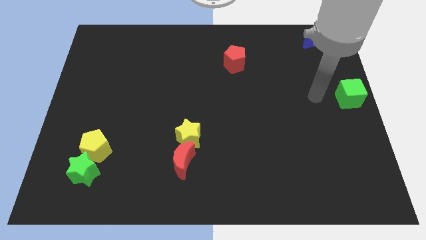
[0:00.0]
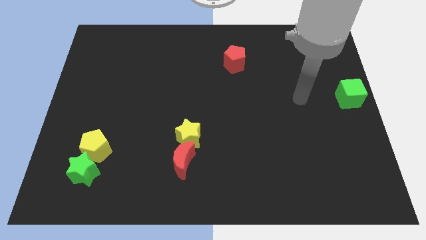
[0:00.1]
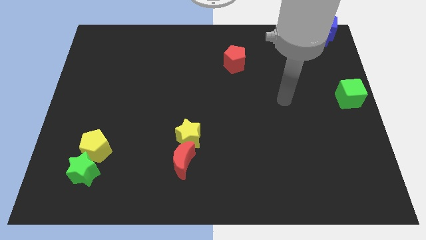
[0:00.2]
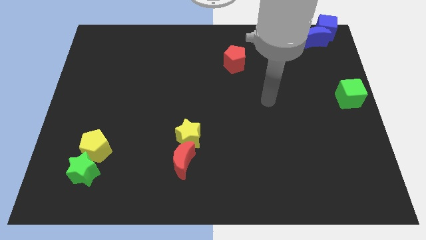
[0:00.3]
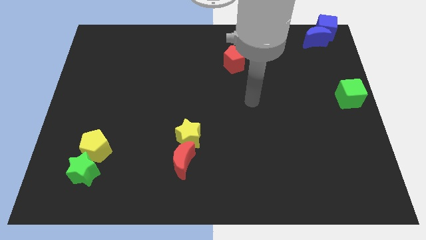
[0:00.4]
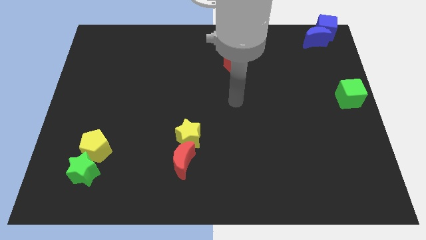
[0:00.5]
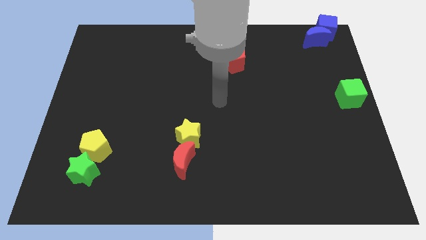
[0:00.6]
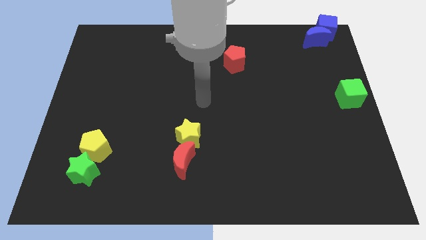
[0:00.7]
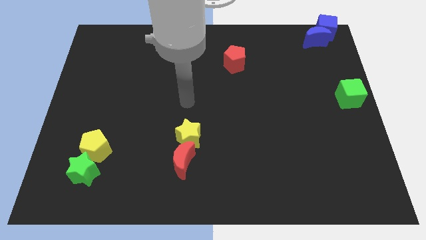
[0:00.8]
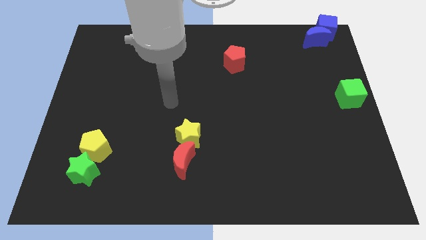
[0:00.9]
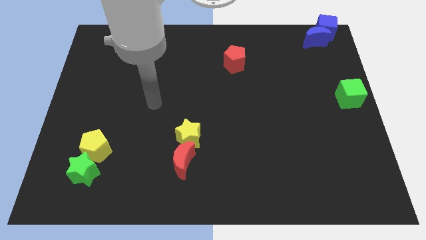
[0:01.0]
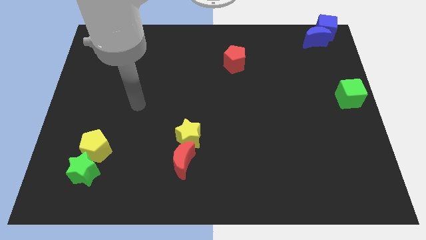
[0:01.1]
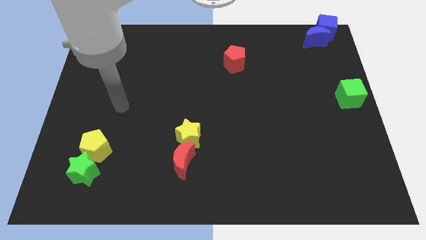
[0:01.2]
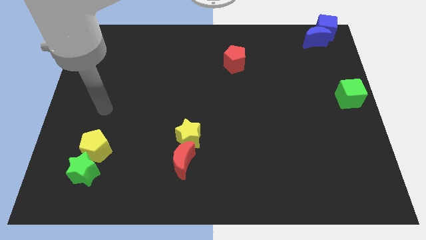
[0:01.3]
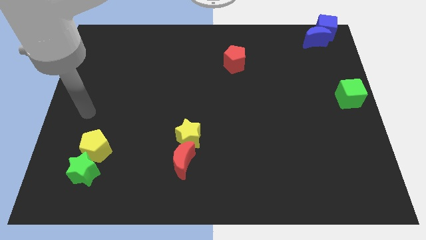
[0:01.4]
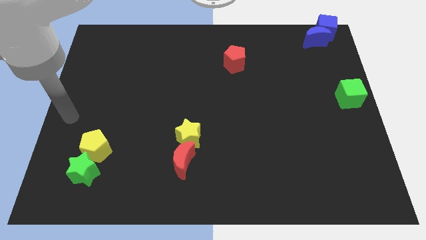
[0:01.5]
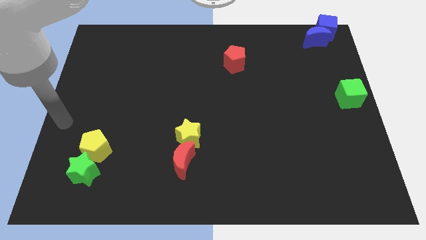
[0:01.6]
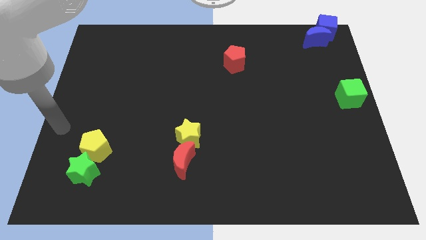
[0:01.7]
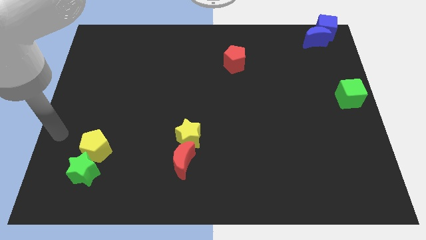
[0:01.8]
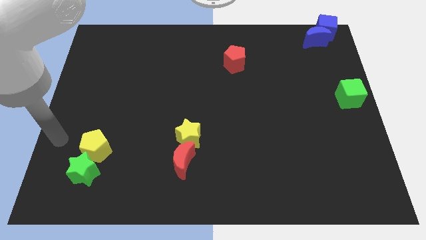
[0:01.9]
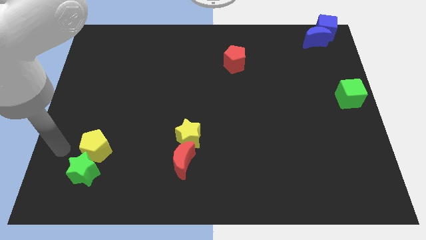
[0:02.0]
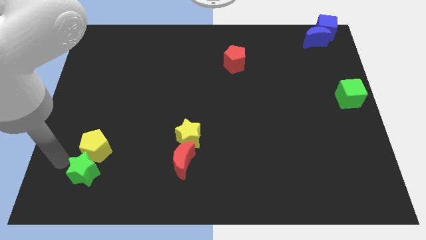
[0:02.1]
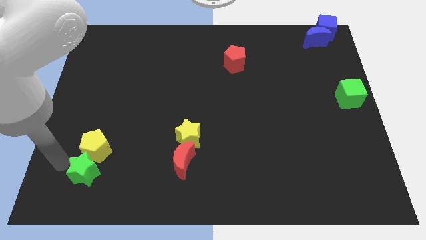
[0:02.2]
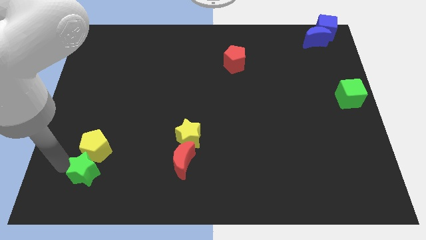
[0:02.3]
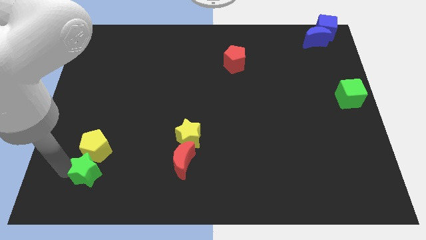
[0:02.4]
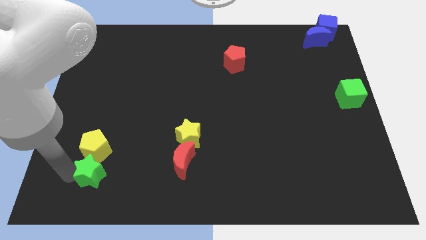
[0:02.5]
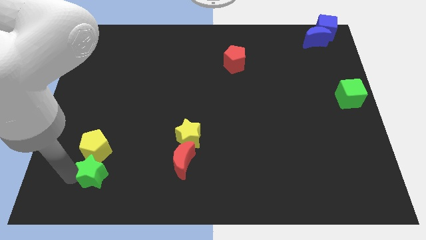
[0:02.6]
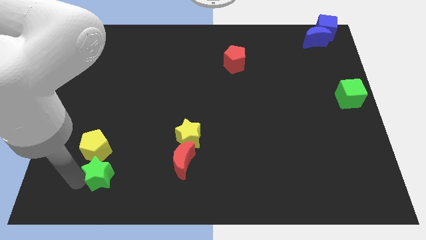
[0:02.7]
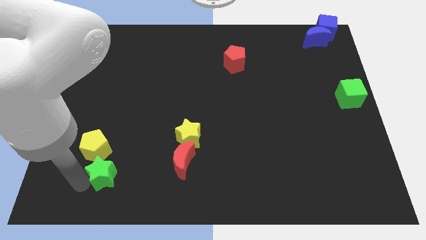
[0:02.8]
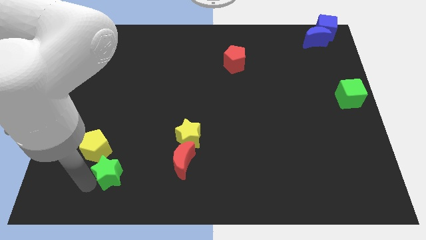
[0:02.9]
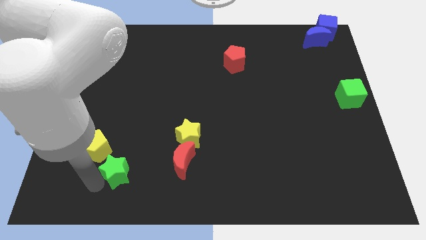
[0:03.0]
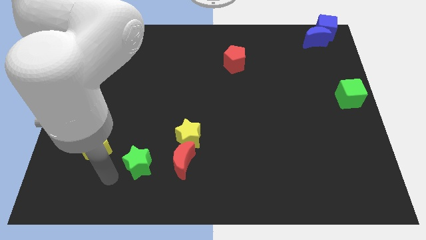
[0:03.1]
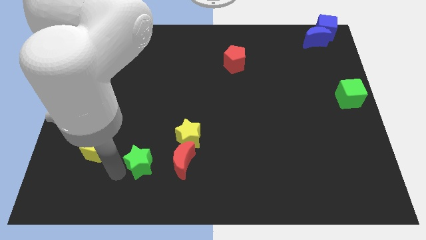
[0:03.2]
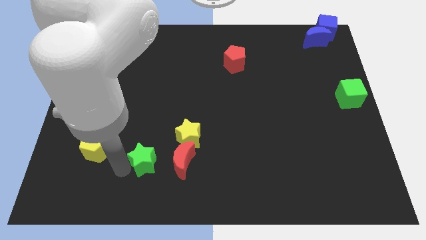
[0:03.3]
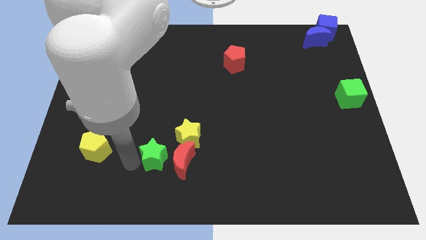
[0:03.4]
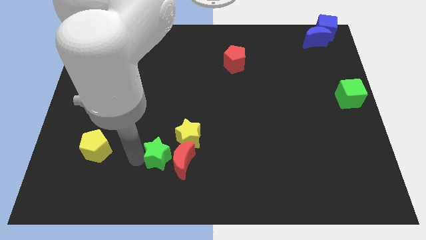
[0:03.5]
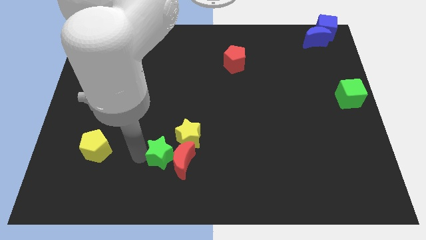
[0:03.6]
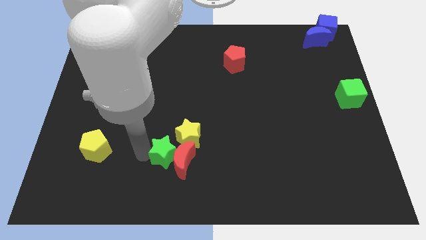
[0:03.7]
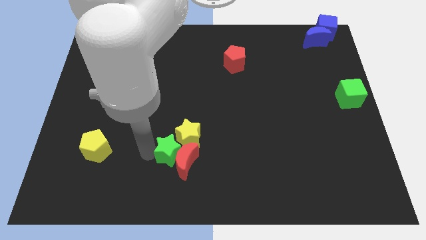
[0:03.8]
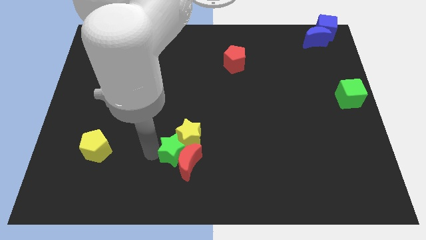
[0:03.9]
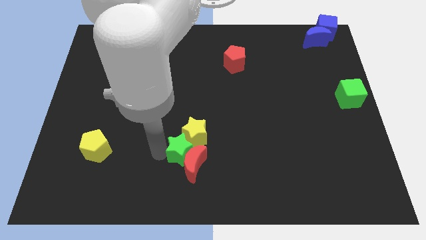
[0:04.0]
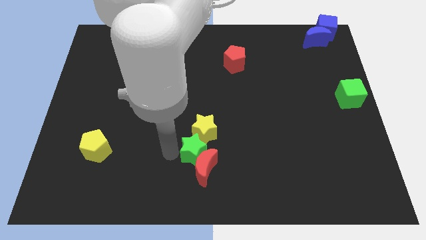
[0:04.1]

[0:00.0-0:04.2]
move the green star into the group of blocks

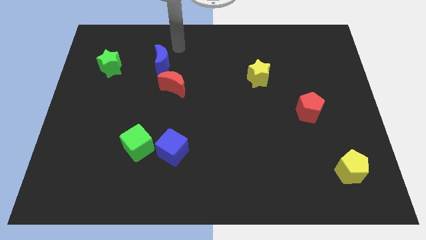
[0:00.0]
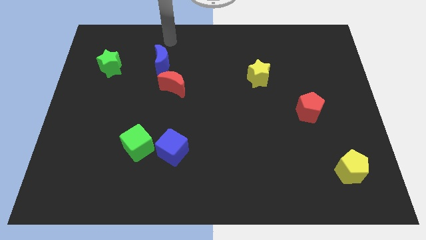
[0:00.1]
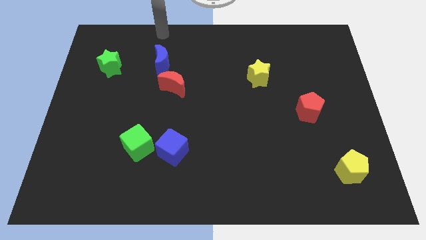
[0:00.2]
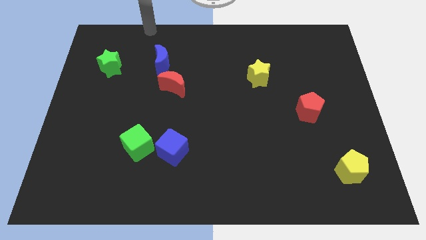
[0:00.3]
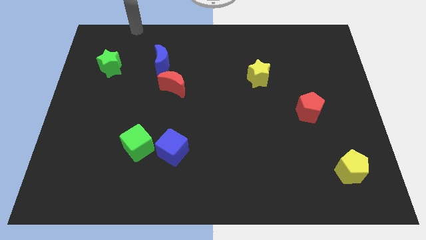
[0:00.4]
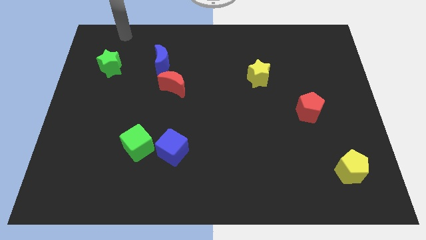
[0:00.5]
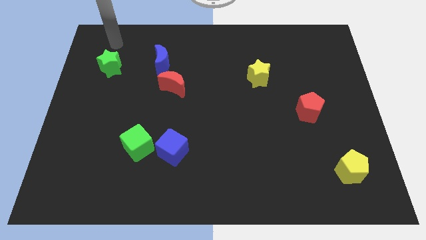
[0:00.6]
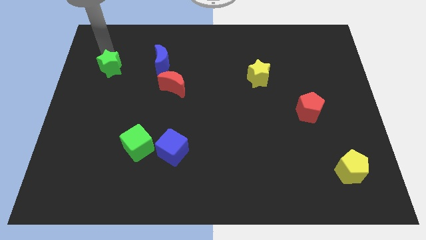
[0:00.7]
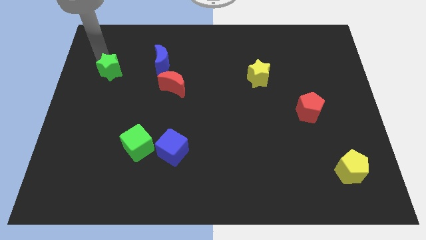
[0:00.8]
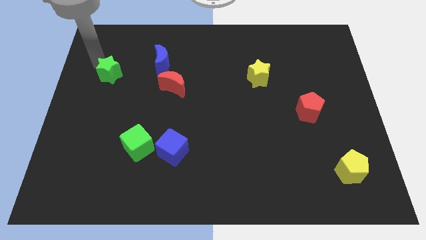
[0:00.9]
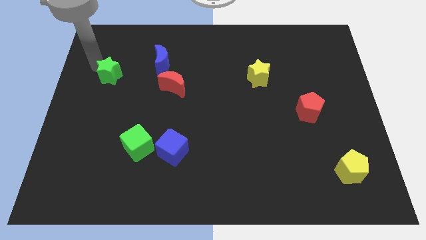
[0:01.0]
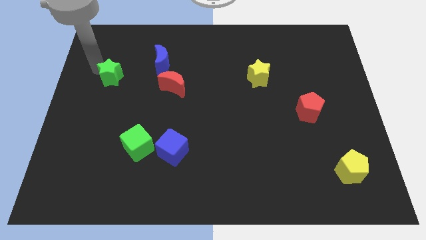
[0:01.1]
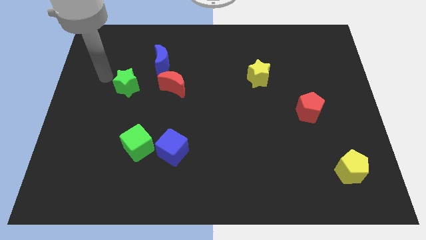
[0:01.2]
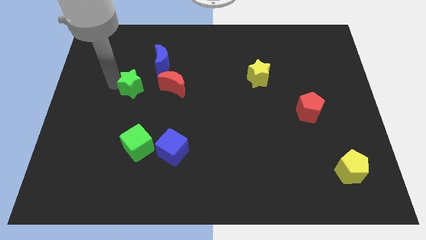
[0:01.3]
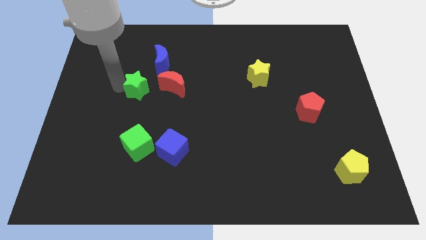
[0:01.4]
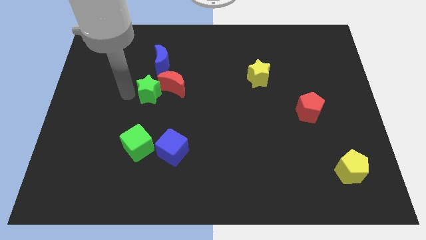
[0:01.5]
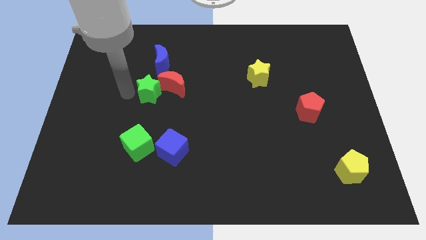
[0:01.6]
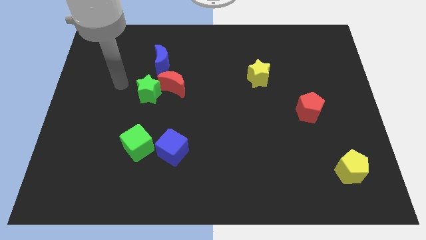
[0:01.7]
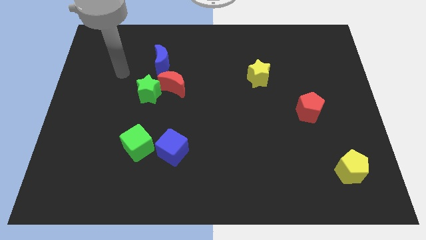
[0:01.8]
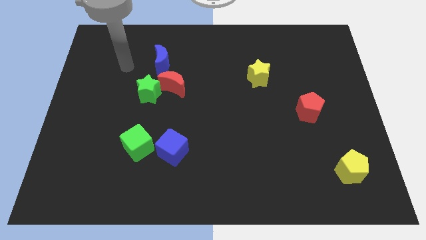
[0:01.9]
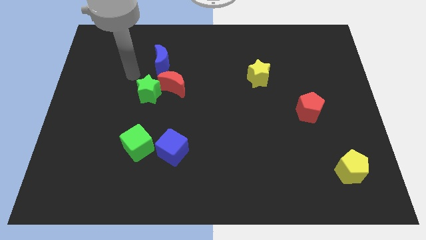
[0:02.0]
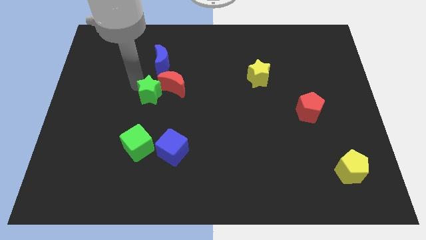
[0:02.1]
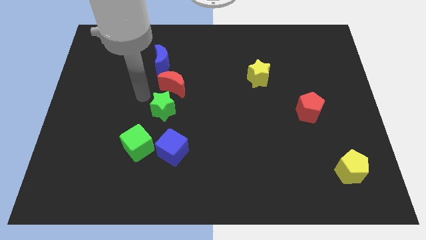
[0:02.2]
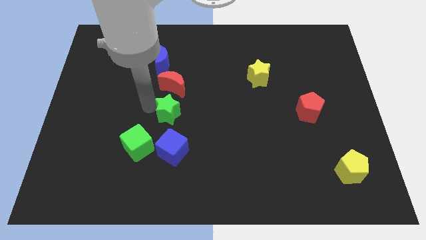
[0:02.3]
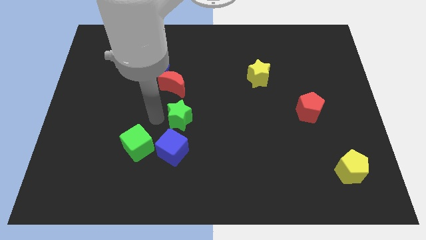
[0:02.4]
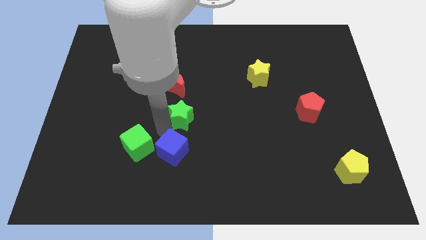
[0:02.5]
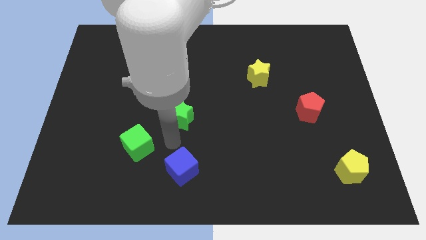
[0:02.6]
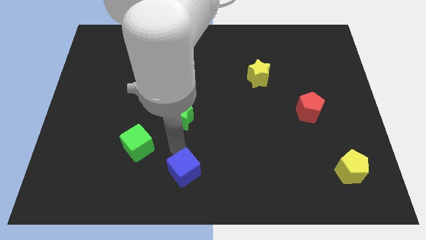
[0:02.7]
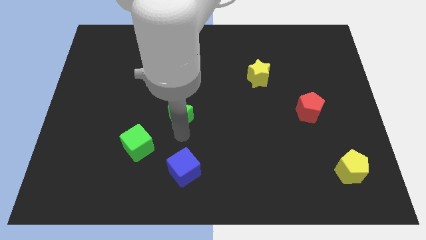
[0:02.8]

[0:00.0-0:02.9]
slightly push the blue cube down

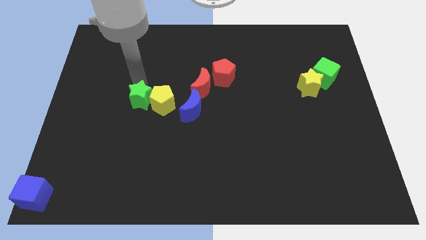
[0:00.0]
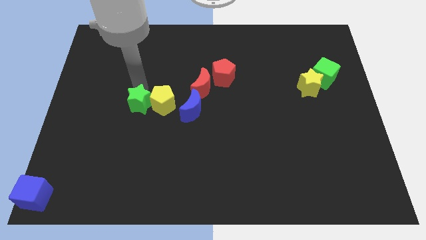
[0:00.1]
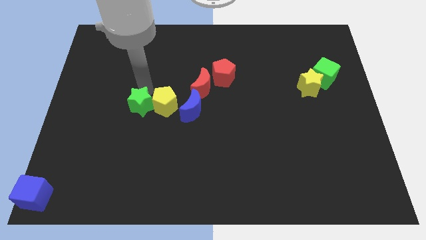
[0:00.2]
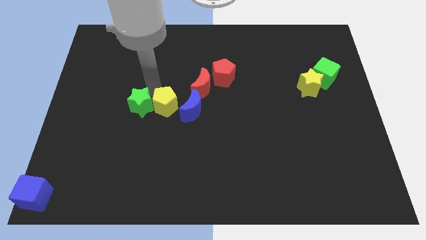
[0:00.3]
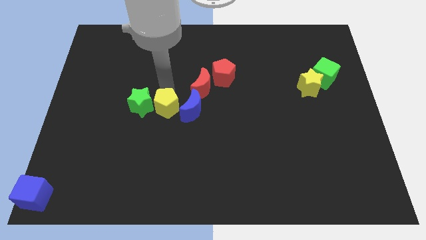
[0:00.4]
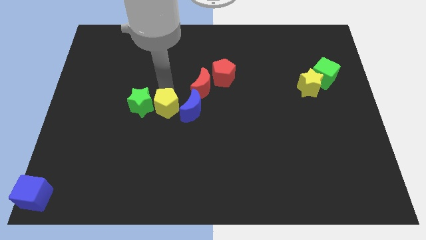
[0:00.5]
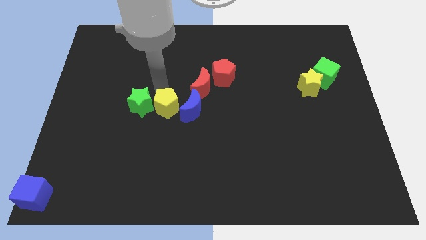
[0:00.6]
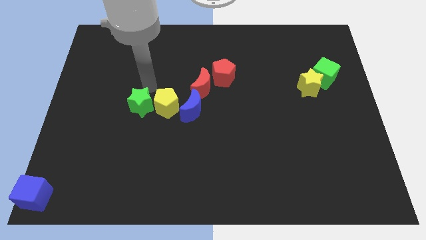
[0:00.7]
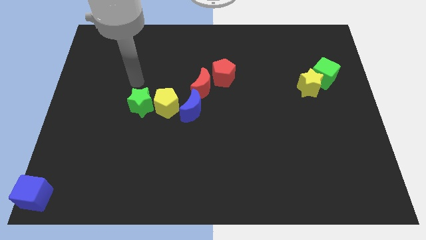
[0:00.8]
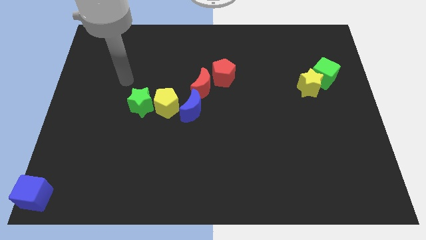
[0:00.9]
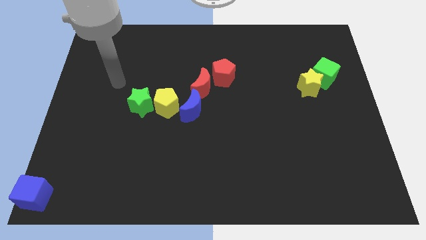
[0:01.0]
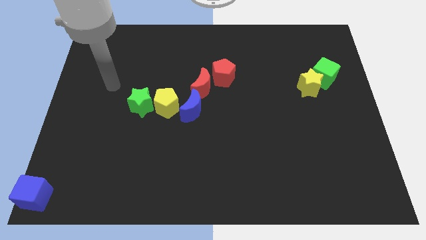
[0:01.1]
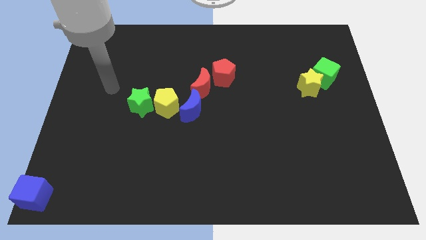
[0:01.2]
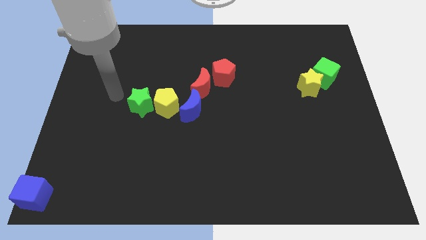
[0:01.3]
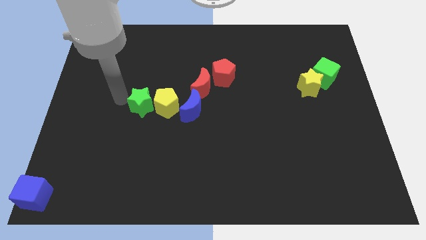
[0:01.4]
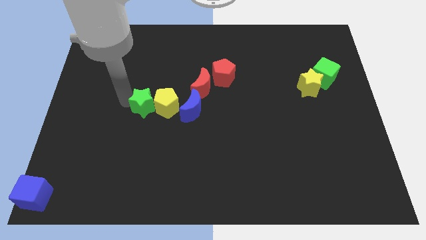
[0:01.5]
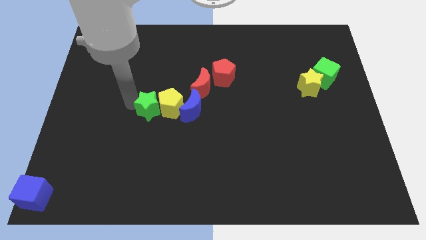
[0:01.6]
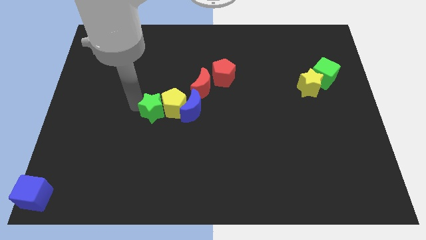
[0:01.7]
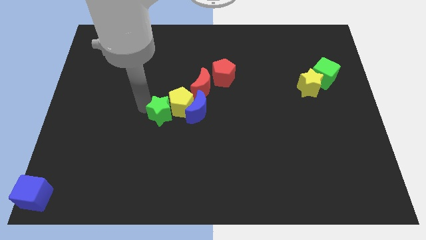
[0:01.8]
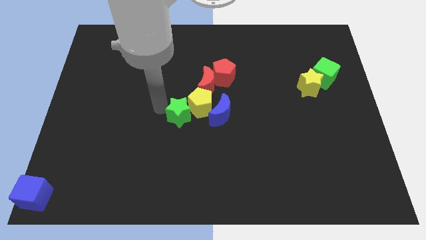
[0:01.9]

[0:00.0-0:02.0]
drag the green star and yellow pentagon into the blue crescent
